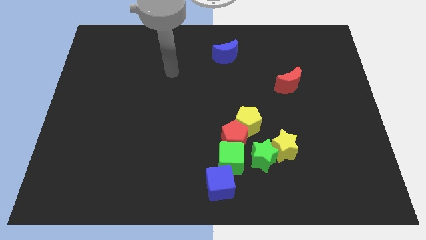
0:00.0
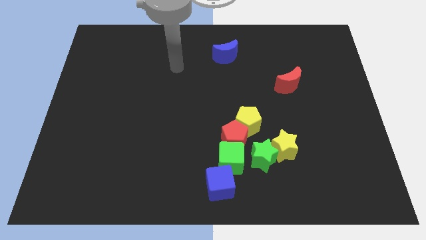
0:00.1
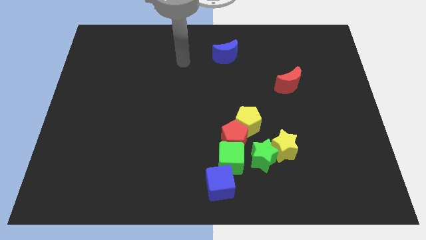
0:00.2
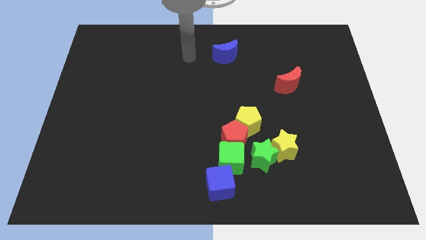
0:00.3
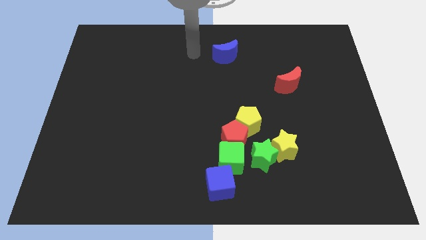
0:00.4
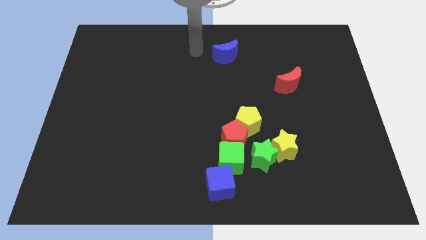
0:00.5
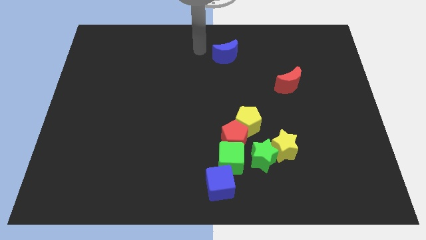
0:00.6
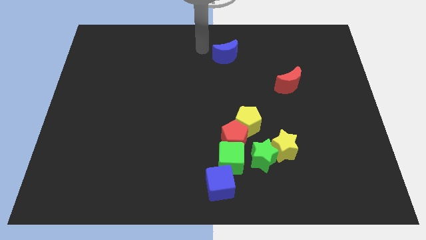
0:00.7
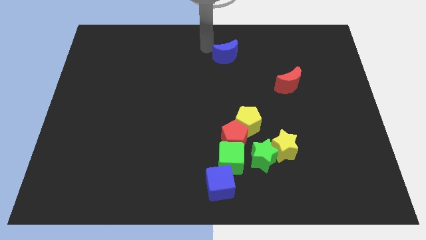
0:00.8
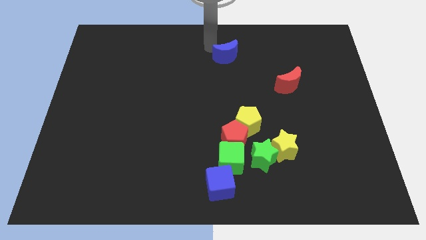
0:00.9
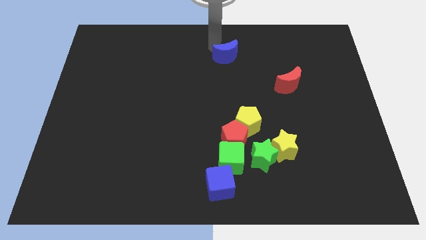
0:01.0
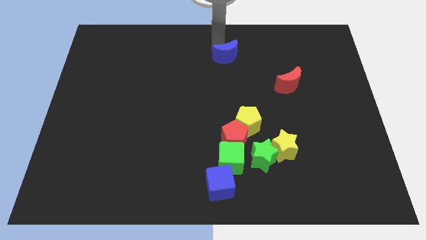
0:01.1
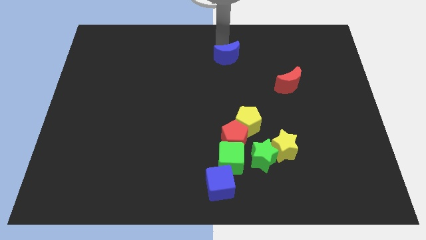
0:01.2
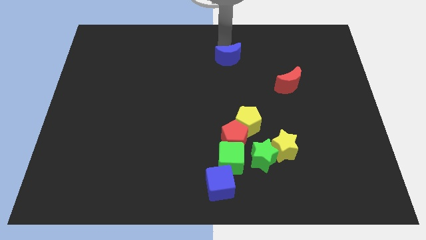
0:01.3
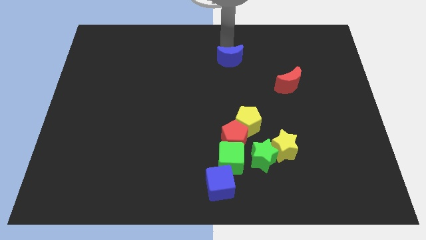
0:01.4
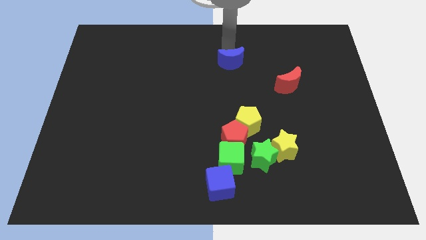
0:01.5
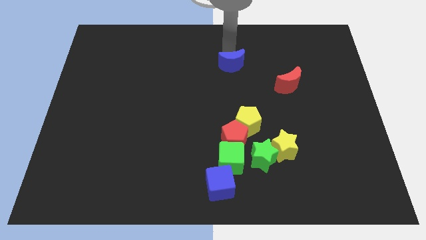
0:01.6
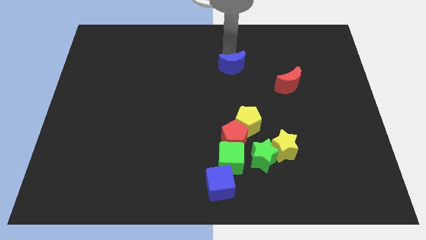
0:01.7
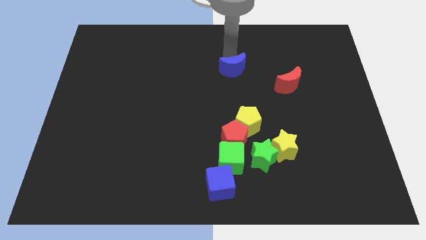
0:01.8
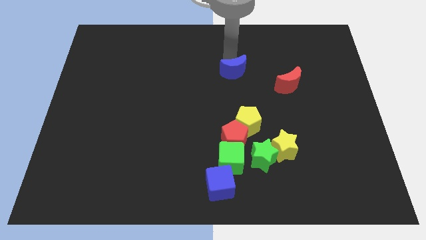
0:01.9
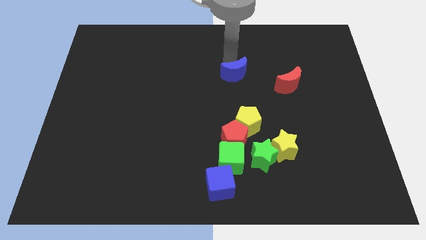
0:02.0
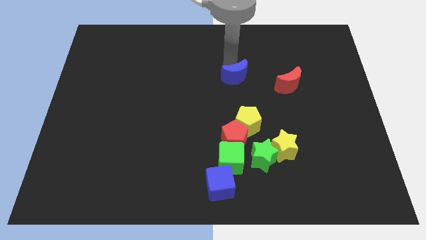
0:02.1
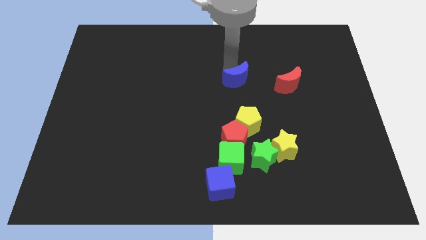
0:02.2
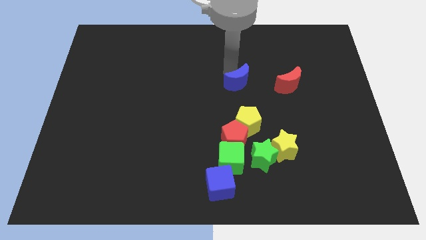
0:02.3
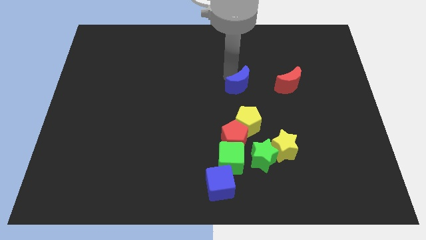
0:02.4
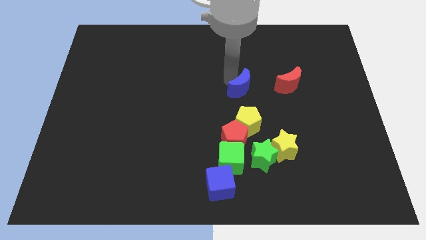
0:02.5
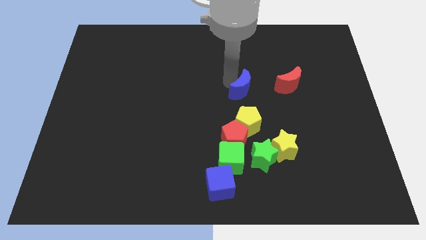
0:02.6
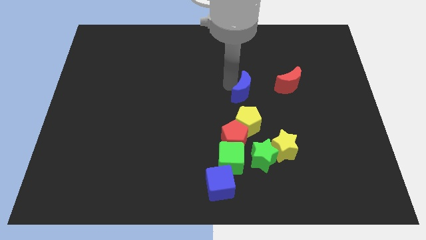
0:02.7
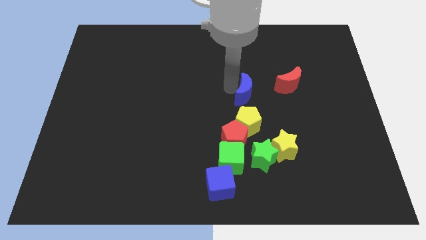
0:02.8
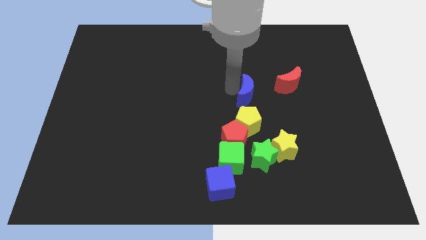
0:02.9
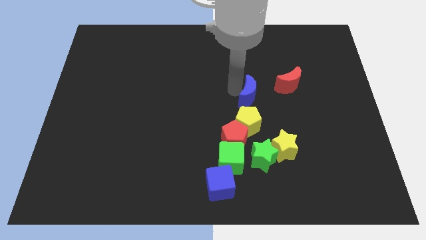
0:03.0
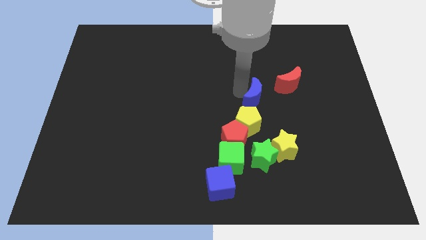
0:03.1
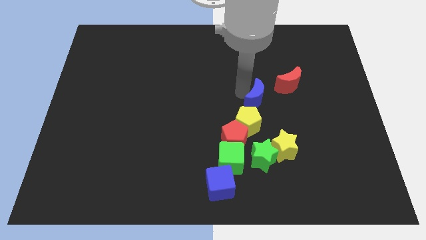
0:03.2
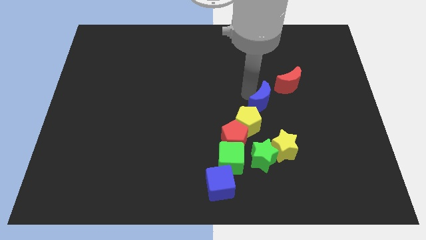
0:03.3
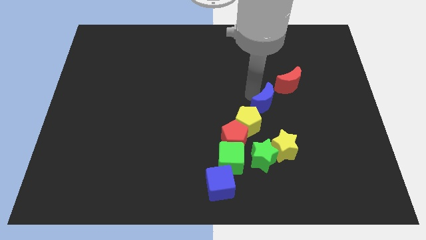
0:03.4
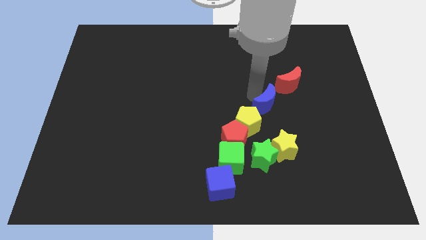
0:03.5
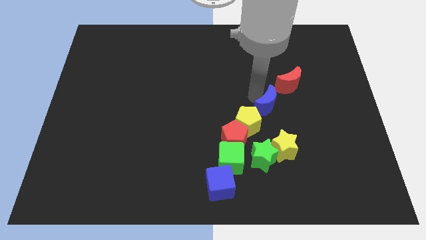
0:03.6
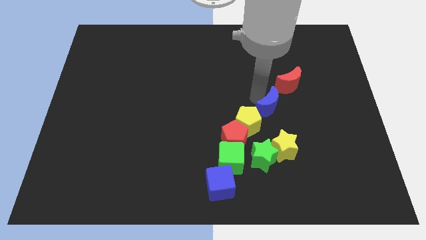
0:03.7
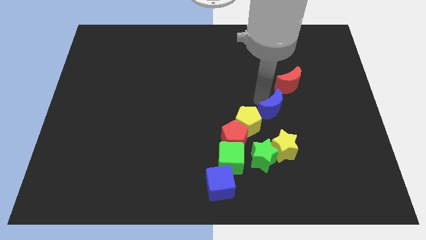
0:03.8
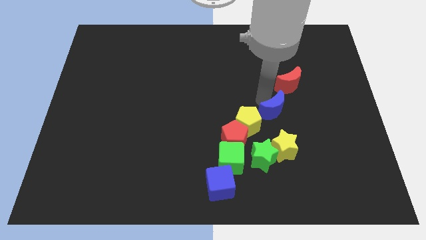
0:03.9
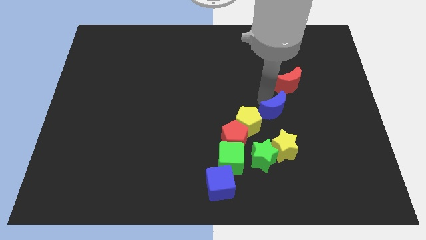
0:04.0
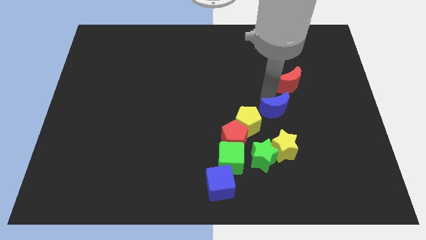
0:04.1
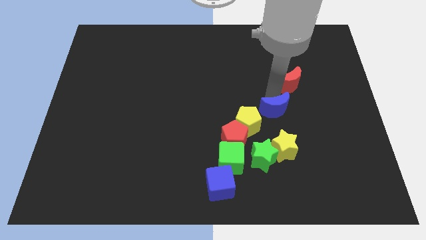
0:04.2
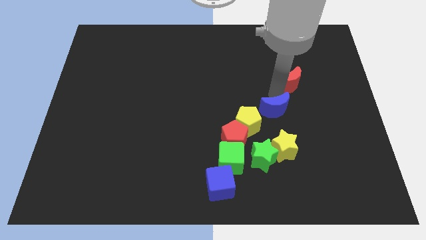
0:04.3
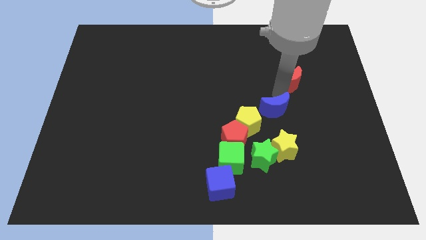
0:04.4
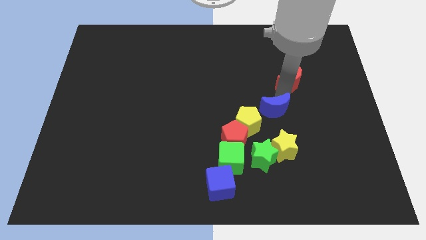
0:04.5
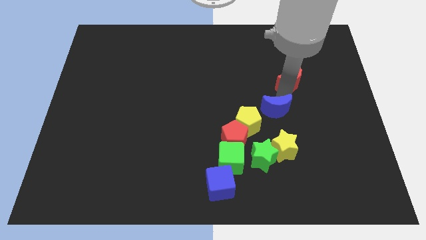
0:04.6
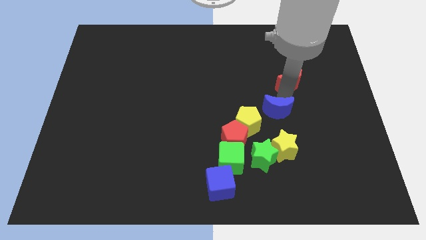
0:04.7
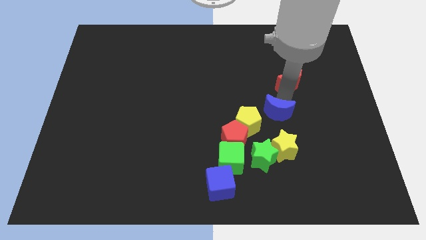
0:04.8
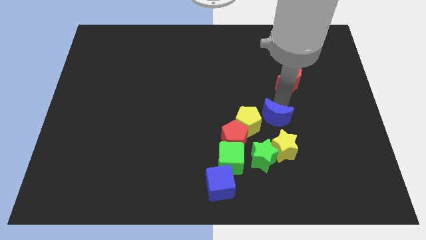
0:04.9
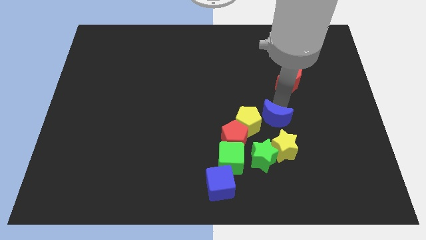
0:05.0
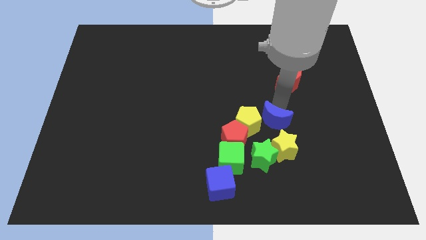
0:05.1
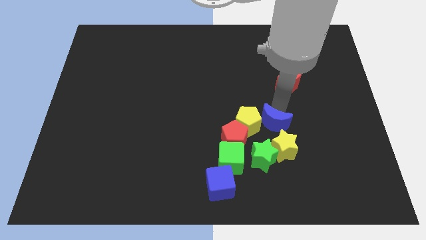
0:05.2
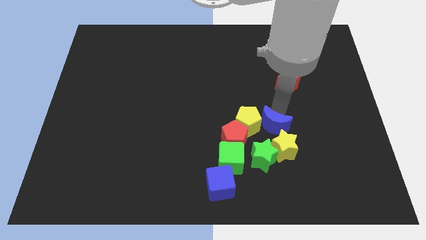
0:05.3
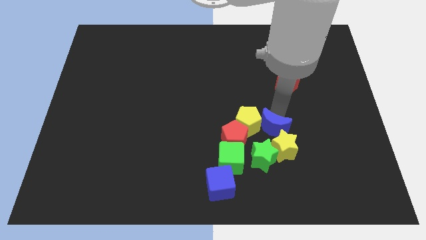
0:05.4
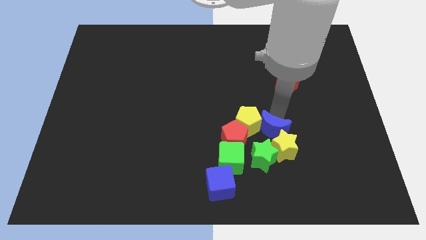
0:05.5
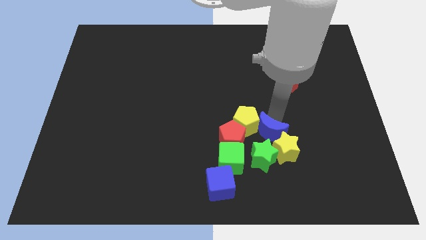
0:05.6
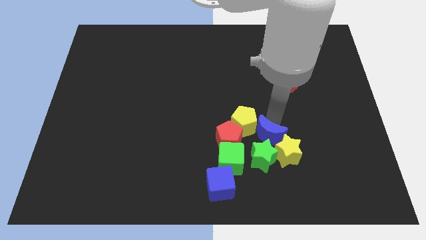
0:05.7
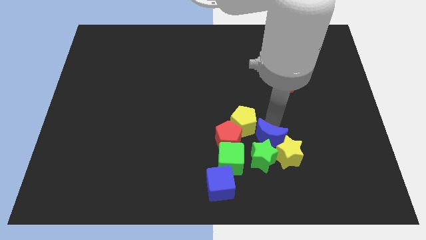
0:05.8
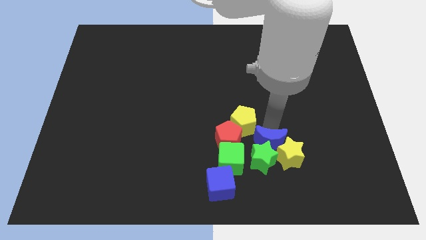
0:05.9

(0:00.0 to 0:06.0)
move the blue moon towards the green star

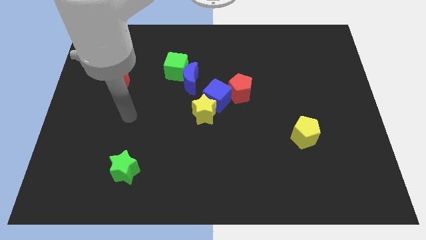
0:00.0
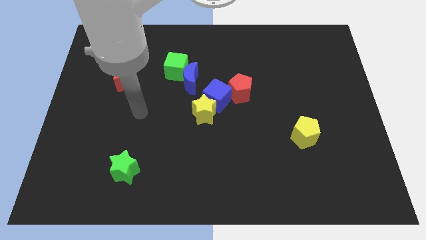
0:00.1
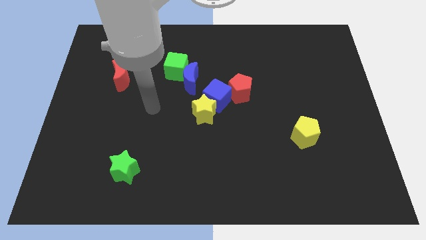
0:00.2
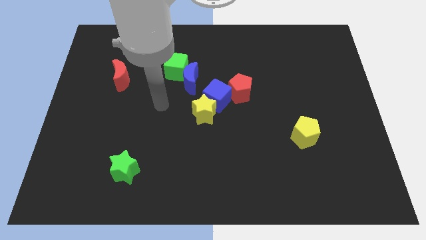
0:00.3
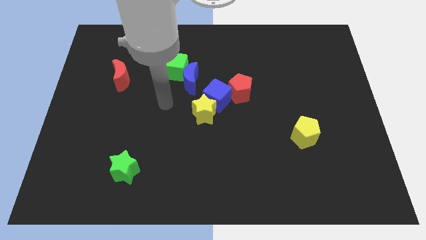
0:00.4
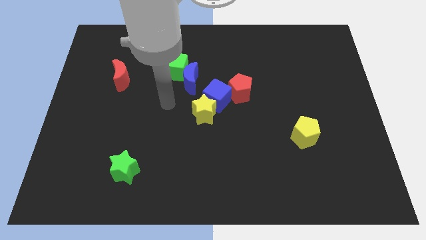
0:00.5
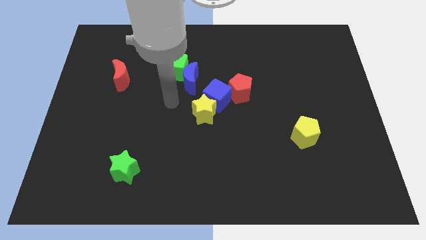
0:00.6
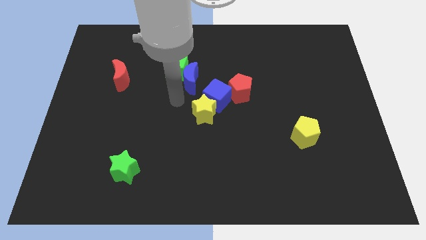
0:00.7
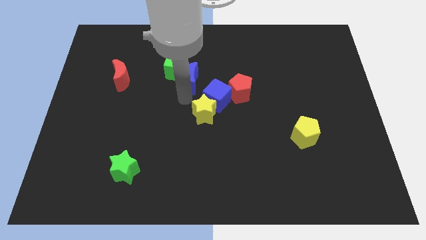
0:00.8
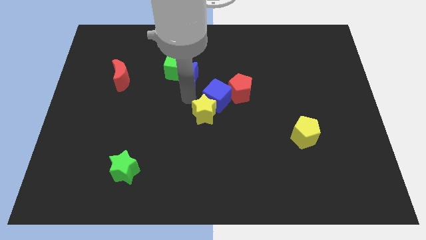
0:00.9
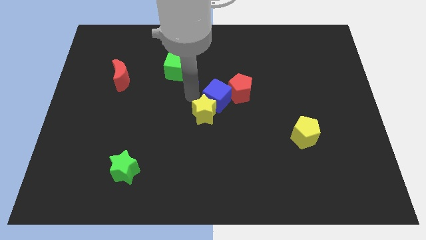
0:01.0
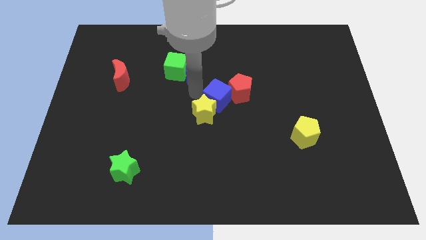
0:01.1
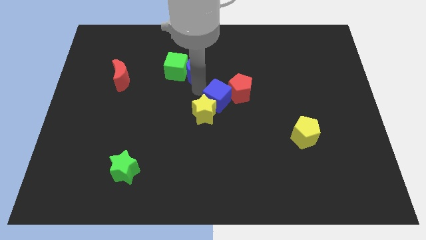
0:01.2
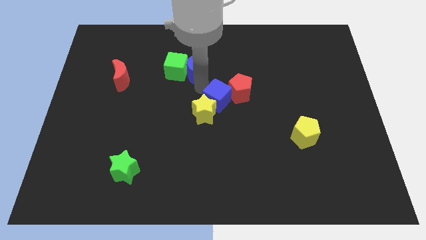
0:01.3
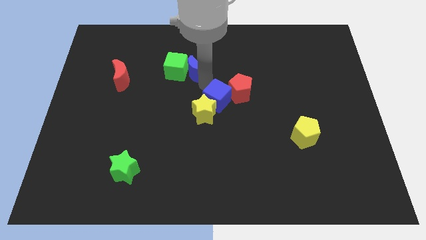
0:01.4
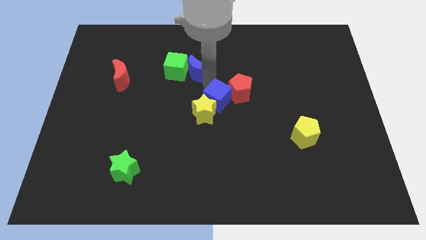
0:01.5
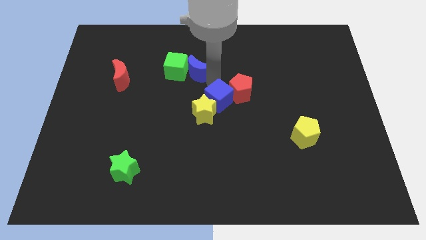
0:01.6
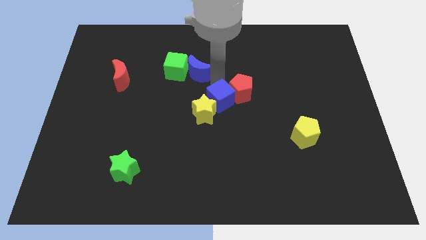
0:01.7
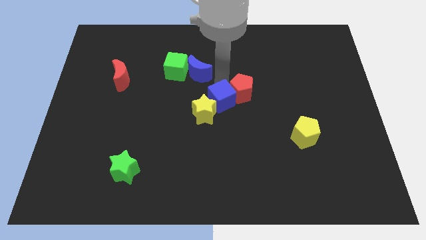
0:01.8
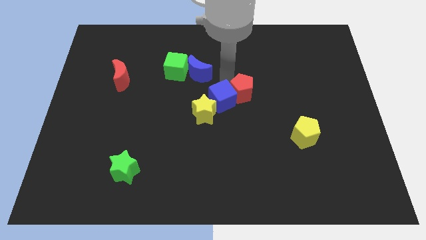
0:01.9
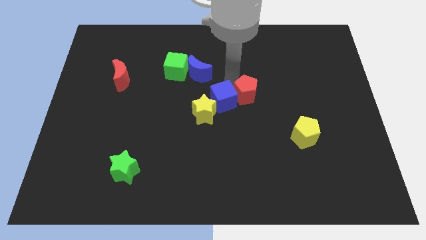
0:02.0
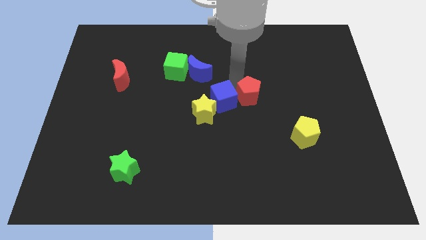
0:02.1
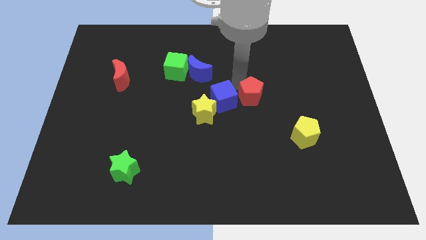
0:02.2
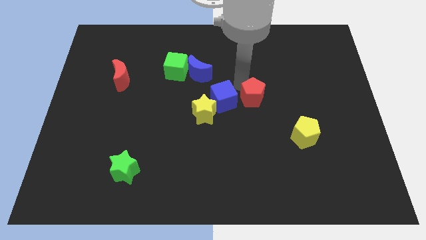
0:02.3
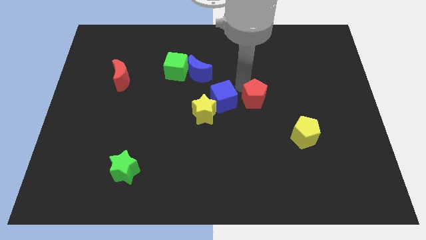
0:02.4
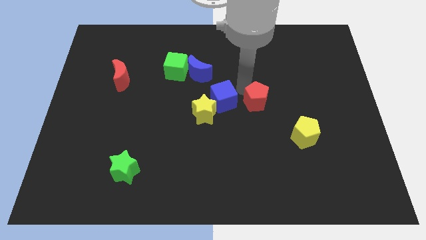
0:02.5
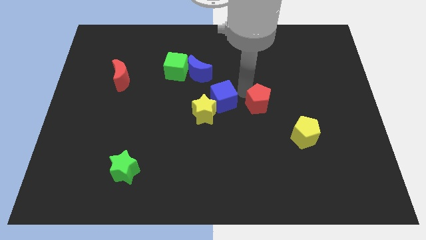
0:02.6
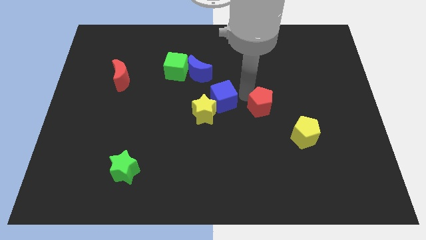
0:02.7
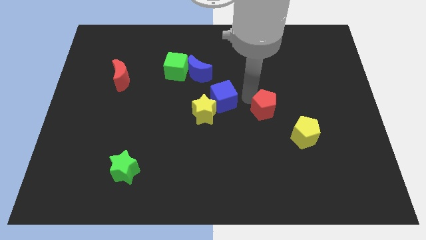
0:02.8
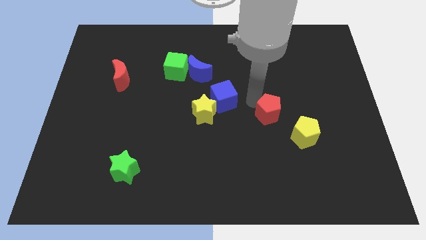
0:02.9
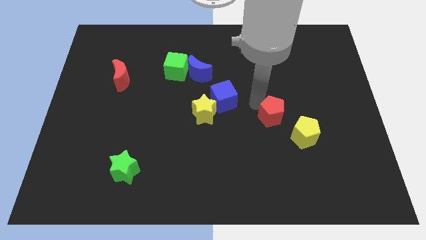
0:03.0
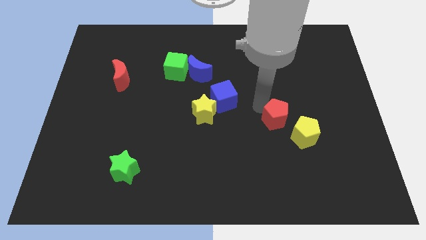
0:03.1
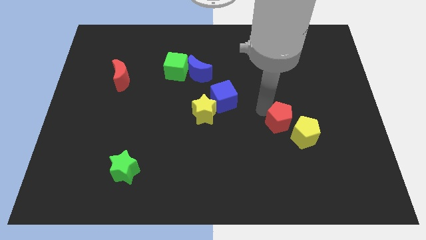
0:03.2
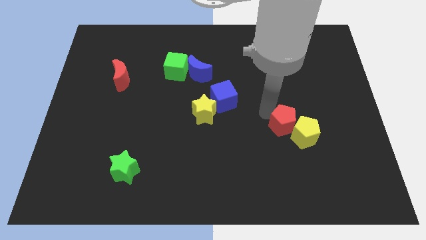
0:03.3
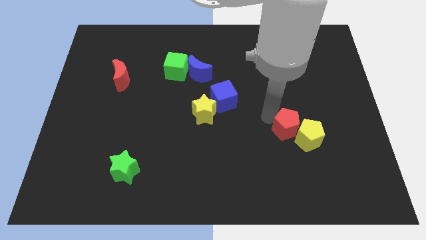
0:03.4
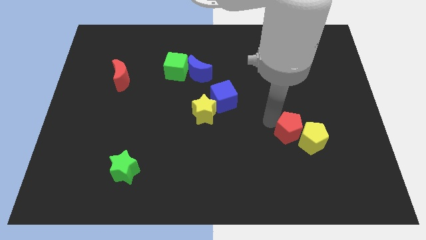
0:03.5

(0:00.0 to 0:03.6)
slide the red pentagon close to the yellow pentagon
